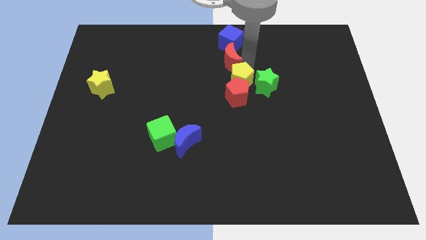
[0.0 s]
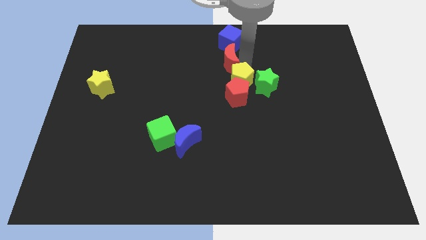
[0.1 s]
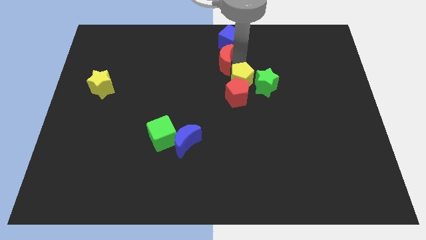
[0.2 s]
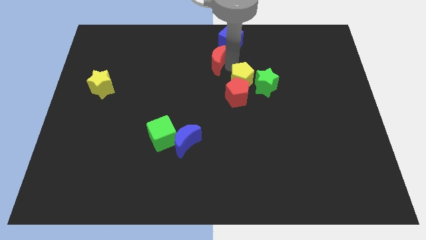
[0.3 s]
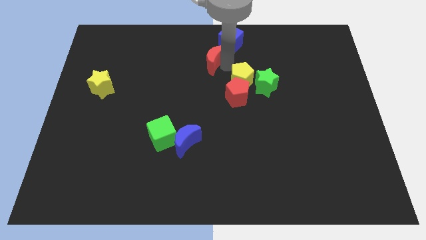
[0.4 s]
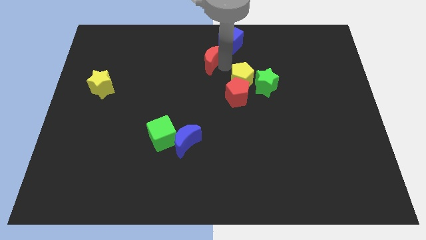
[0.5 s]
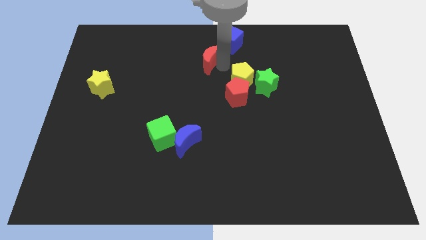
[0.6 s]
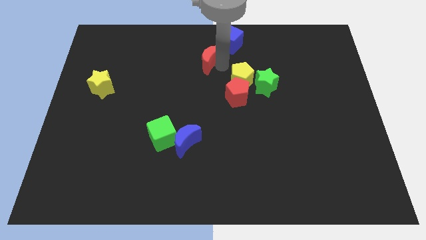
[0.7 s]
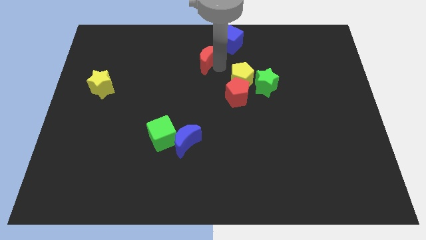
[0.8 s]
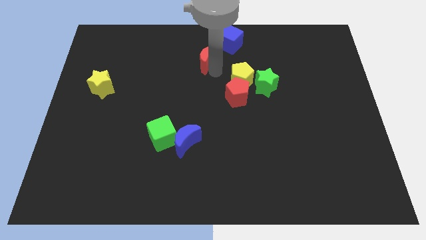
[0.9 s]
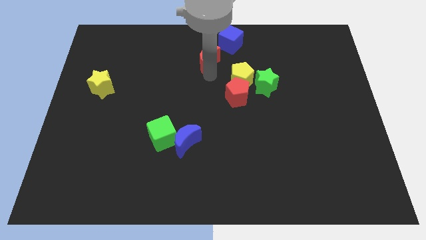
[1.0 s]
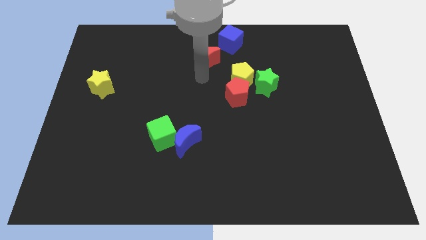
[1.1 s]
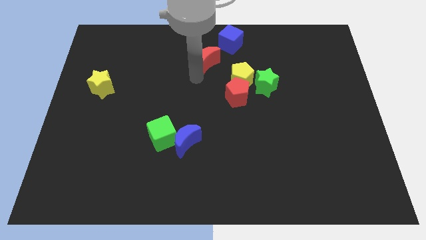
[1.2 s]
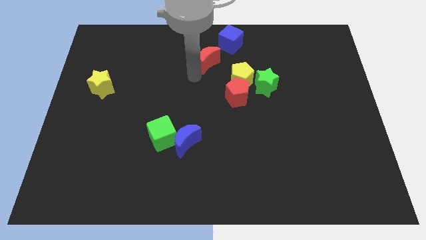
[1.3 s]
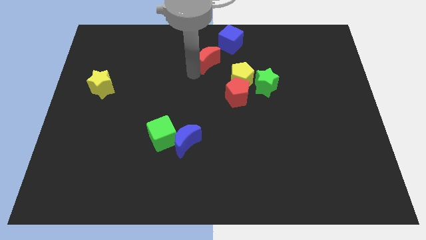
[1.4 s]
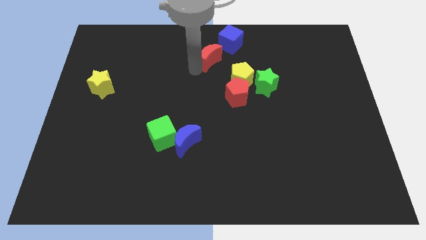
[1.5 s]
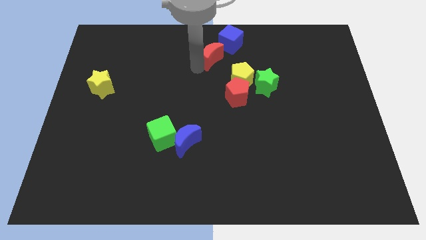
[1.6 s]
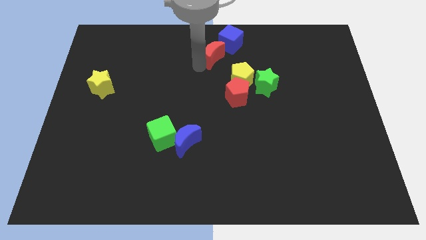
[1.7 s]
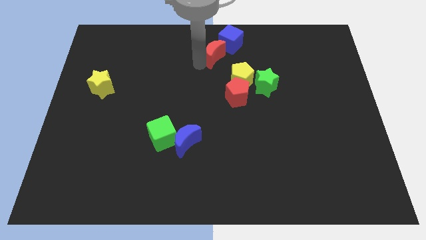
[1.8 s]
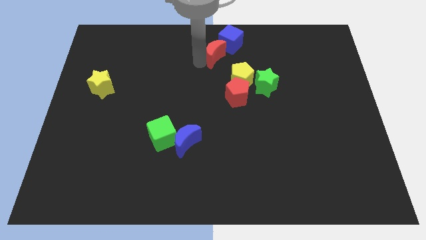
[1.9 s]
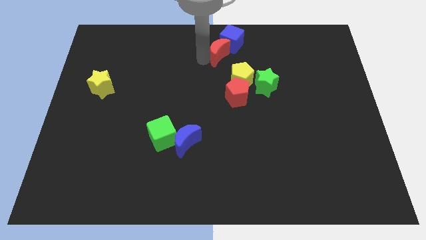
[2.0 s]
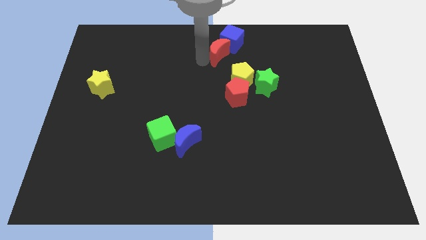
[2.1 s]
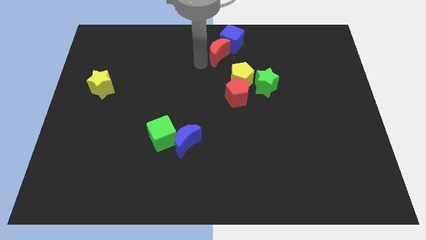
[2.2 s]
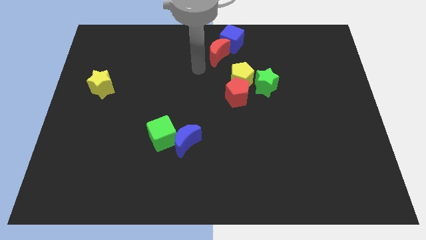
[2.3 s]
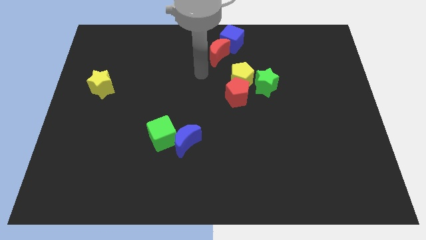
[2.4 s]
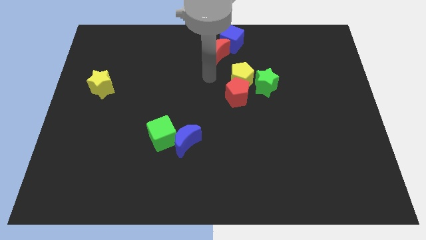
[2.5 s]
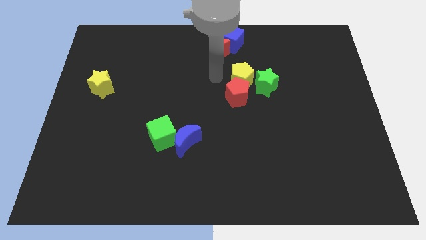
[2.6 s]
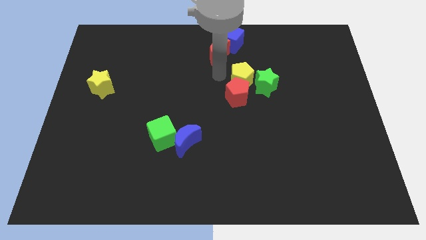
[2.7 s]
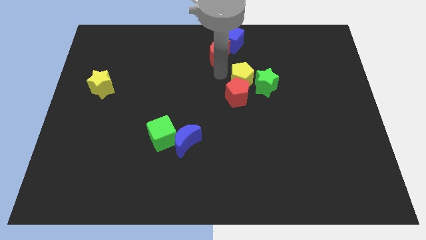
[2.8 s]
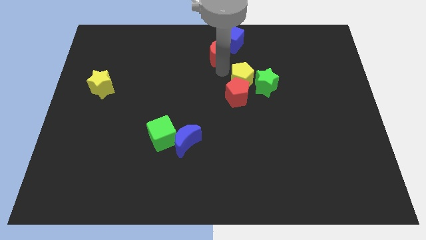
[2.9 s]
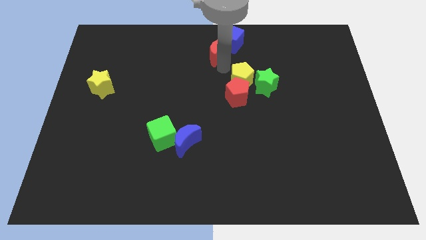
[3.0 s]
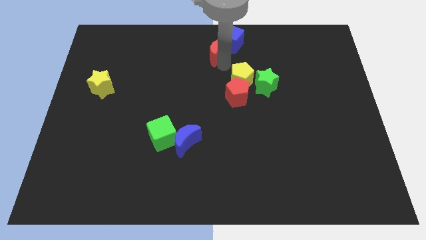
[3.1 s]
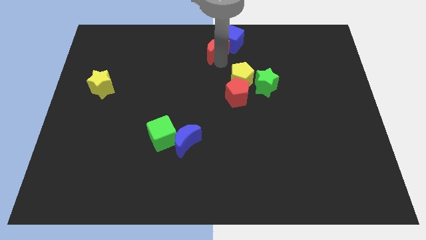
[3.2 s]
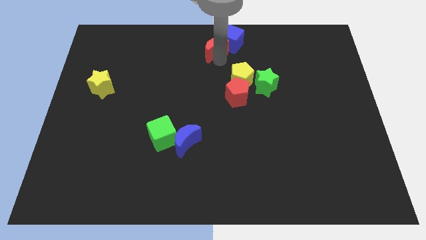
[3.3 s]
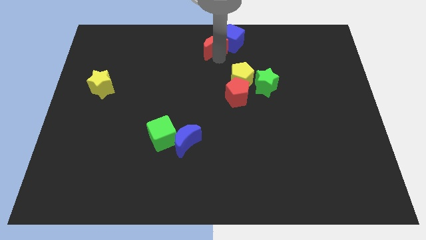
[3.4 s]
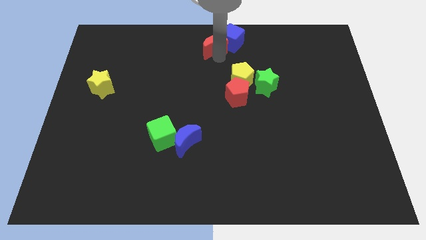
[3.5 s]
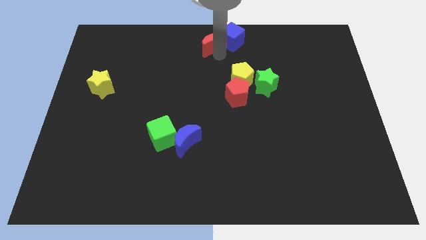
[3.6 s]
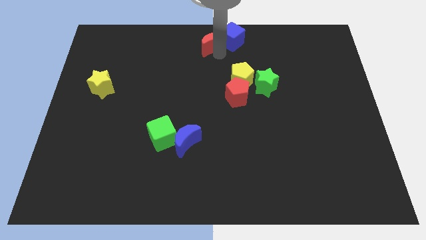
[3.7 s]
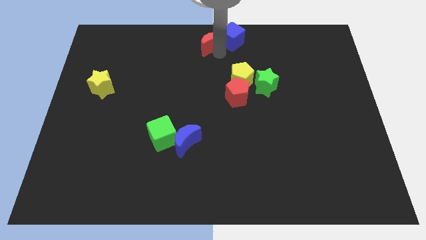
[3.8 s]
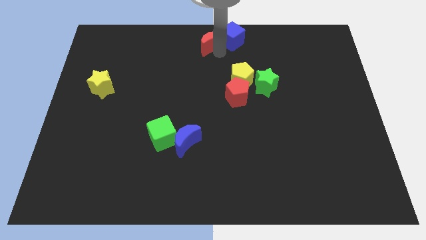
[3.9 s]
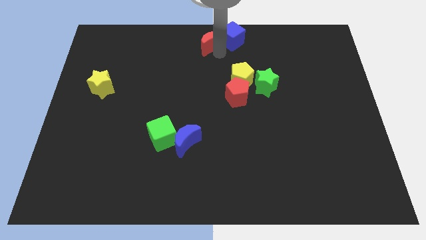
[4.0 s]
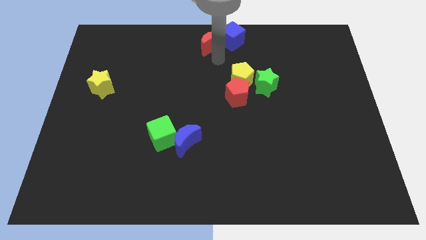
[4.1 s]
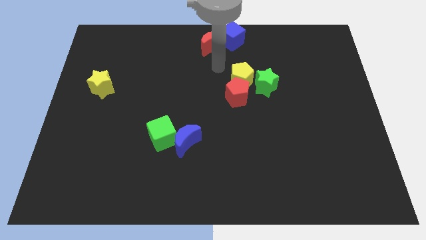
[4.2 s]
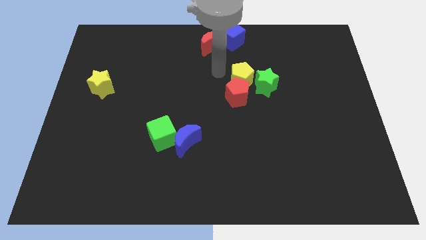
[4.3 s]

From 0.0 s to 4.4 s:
push the red crescent and the blue cube towards the top center of the board

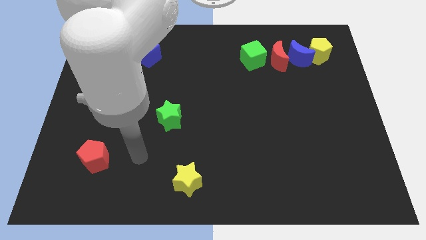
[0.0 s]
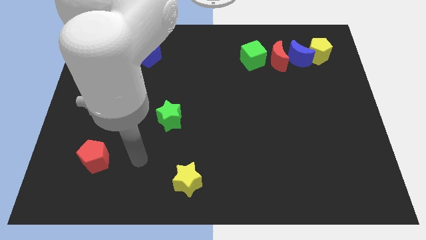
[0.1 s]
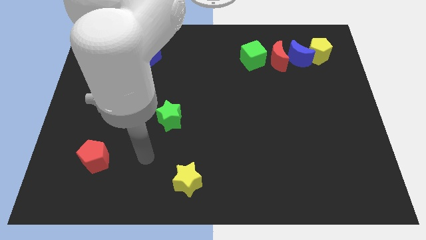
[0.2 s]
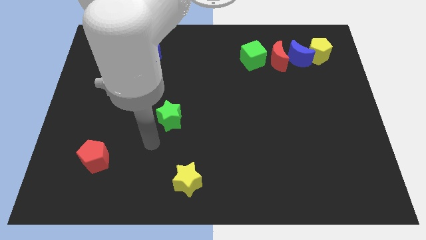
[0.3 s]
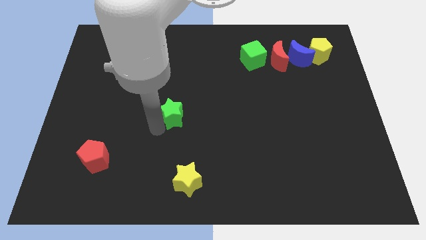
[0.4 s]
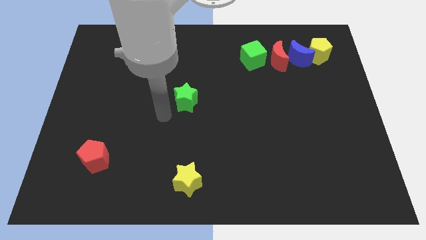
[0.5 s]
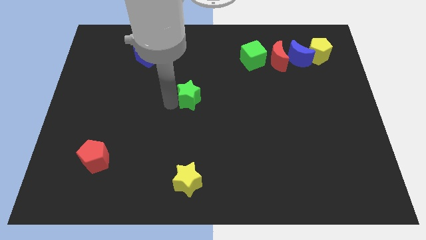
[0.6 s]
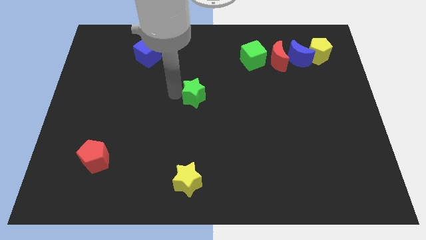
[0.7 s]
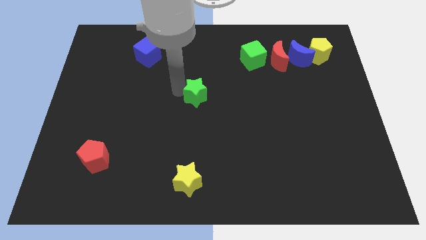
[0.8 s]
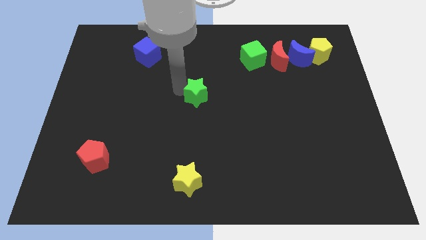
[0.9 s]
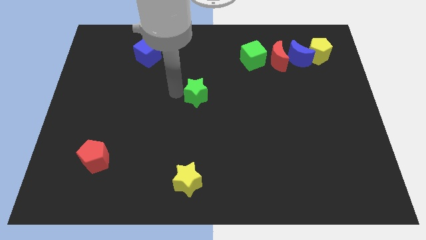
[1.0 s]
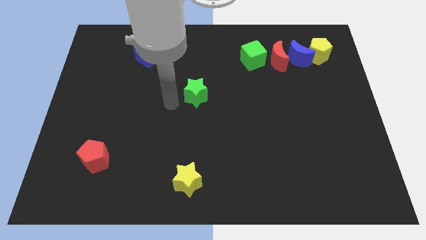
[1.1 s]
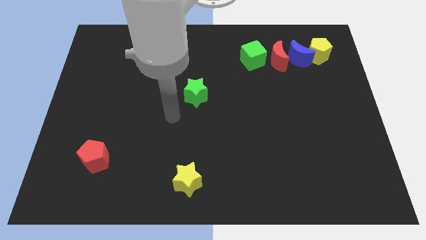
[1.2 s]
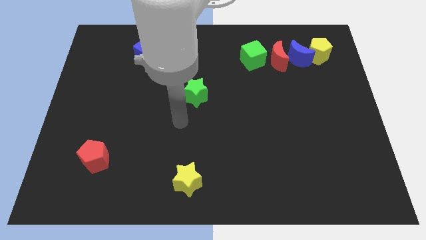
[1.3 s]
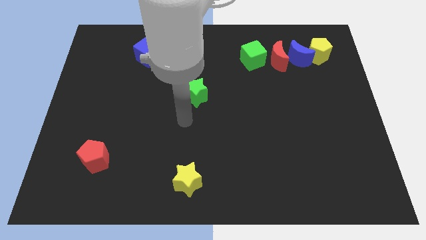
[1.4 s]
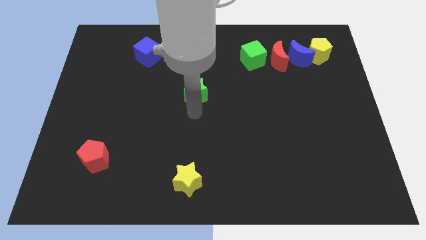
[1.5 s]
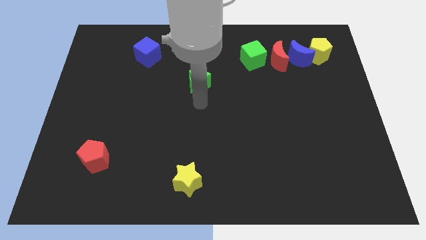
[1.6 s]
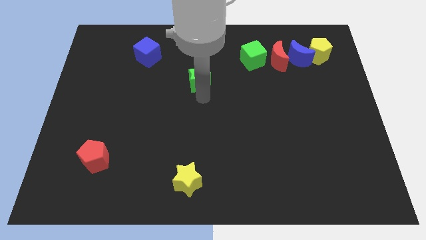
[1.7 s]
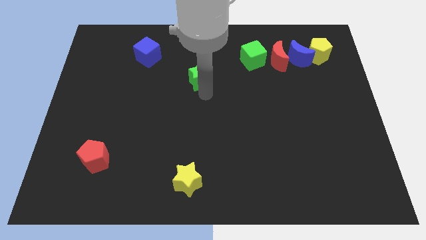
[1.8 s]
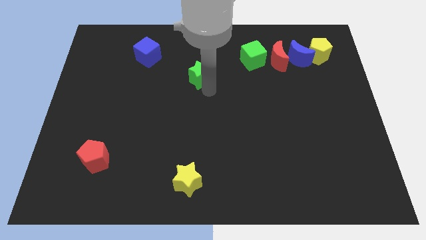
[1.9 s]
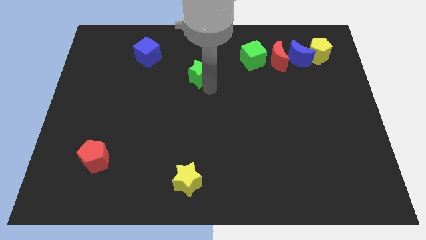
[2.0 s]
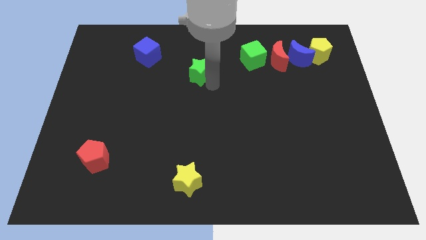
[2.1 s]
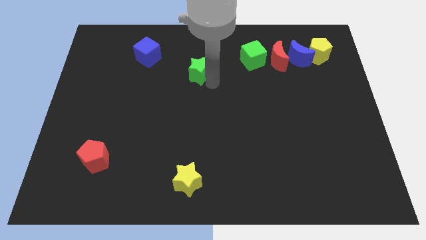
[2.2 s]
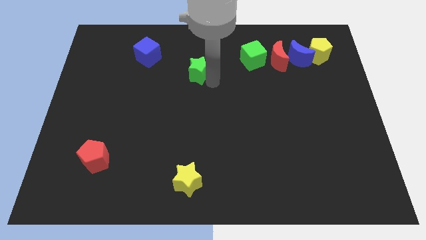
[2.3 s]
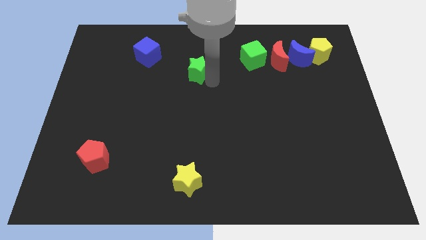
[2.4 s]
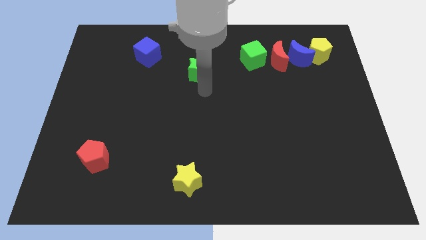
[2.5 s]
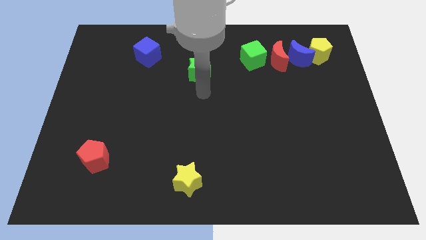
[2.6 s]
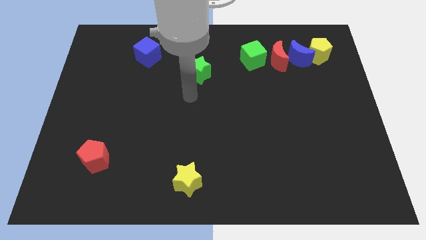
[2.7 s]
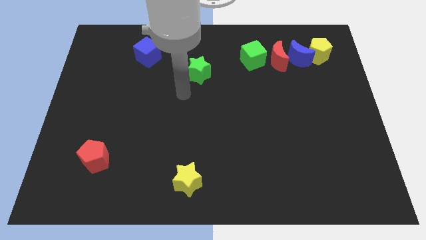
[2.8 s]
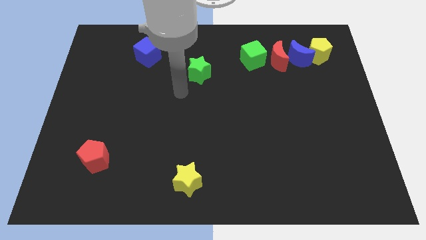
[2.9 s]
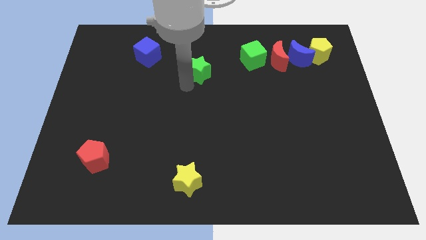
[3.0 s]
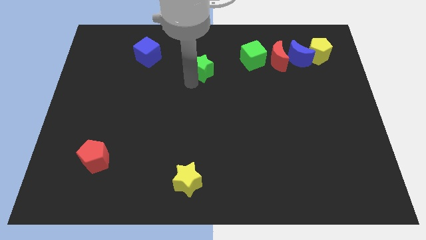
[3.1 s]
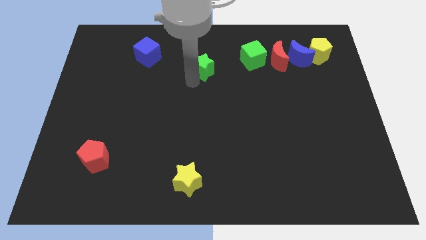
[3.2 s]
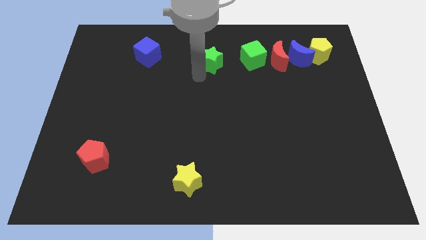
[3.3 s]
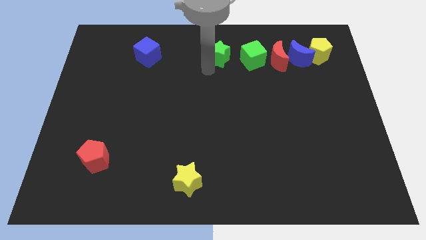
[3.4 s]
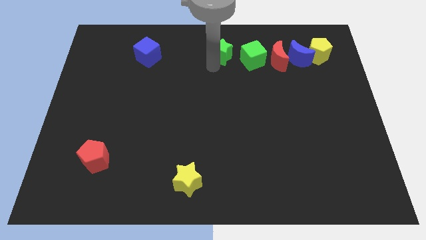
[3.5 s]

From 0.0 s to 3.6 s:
place the green star left to the green cube

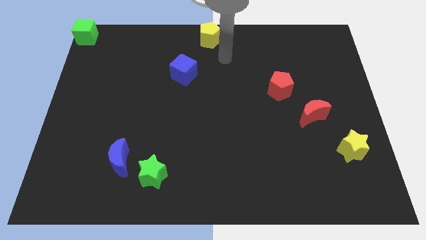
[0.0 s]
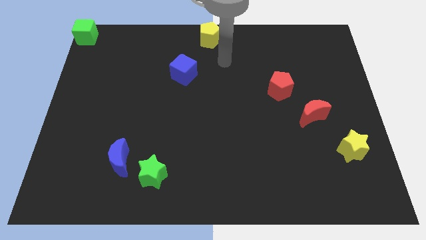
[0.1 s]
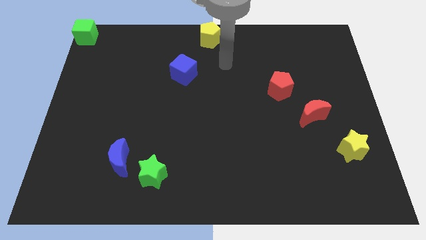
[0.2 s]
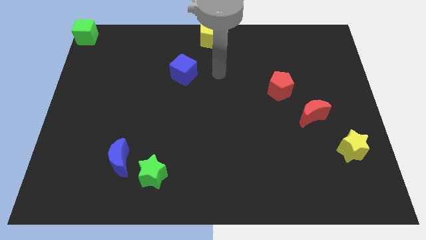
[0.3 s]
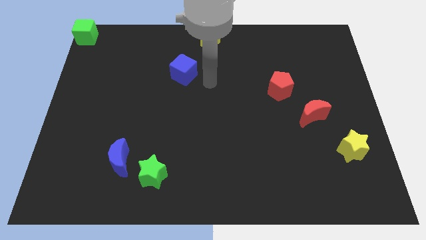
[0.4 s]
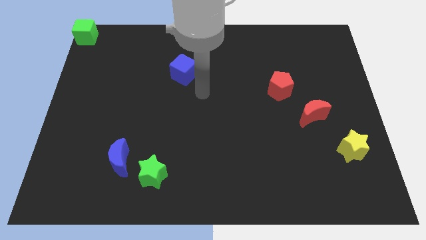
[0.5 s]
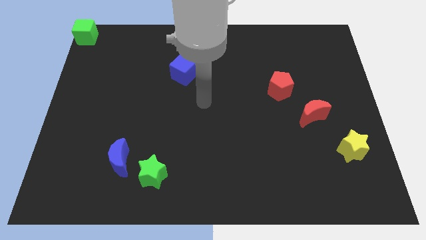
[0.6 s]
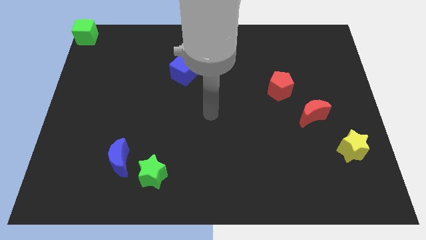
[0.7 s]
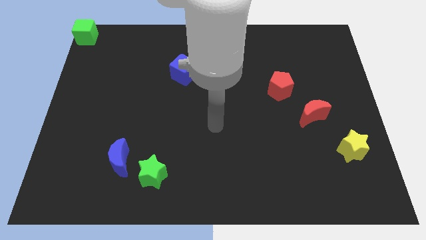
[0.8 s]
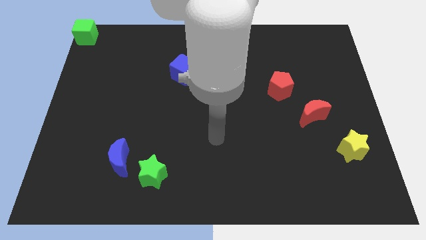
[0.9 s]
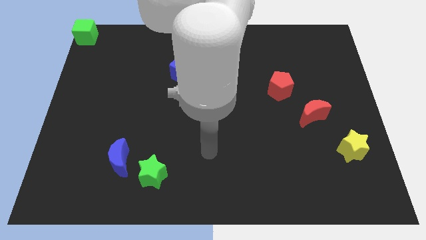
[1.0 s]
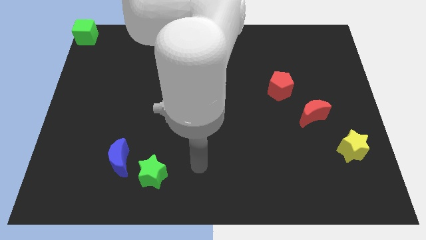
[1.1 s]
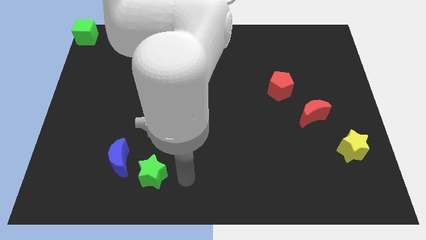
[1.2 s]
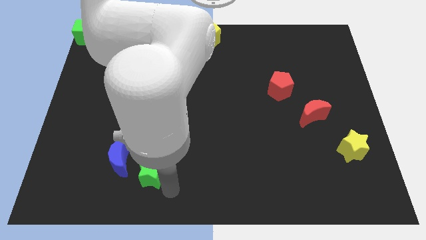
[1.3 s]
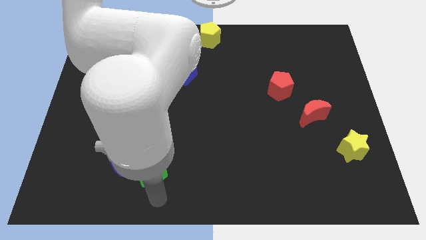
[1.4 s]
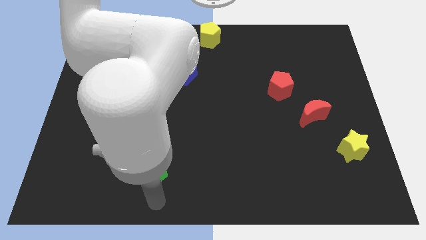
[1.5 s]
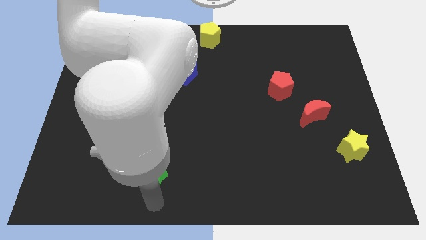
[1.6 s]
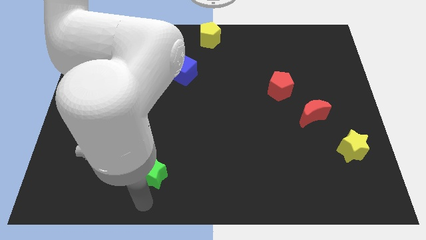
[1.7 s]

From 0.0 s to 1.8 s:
move your hand to the bottom side of the green star
